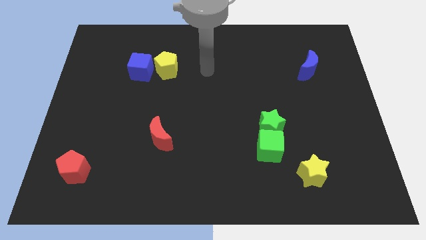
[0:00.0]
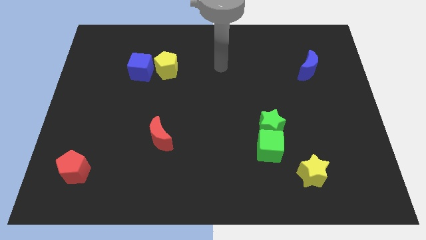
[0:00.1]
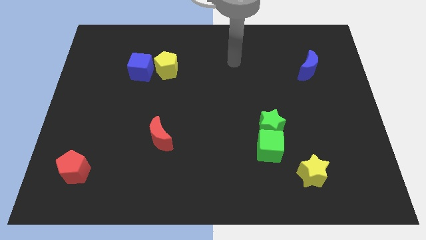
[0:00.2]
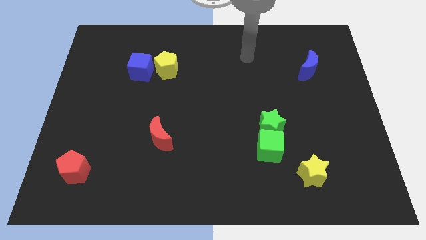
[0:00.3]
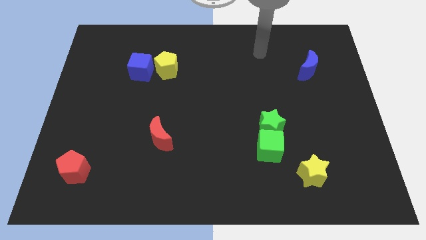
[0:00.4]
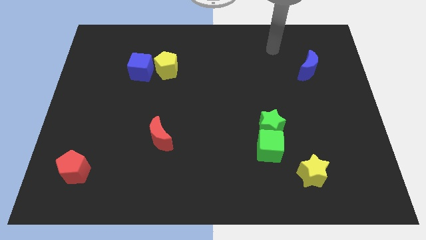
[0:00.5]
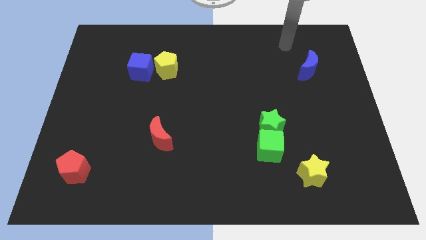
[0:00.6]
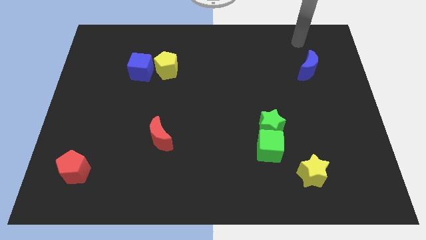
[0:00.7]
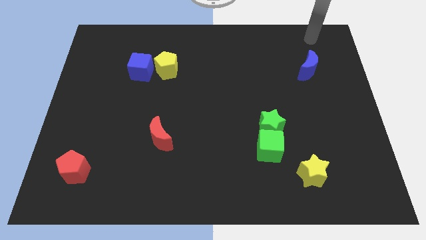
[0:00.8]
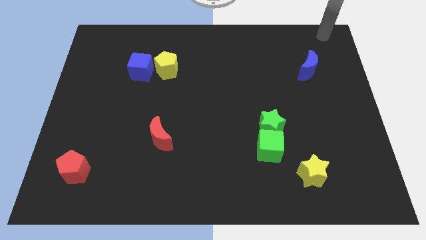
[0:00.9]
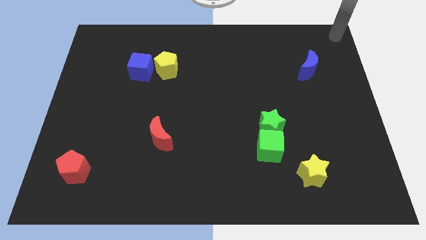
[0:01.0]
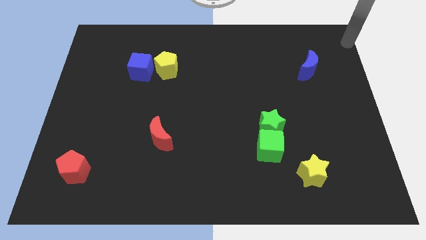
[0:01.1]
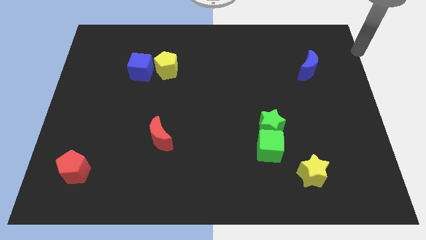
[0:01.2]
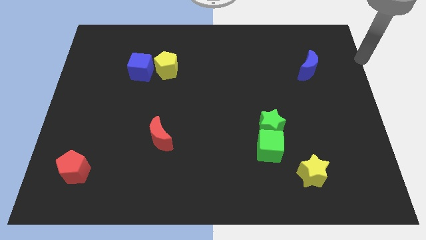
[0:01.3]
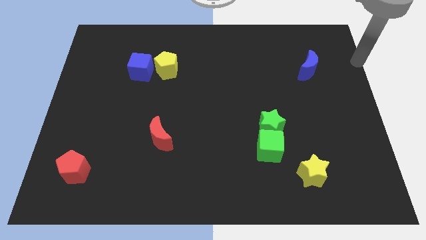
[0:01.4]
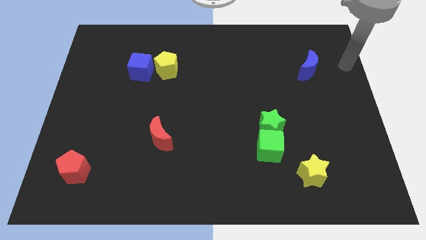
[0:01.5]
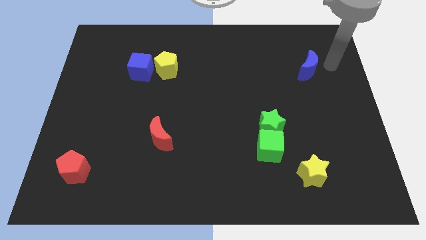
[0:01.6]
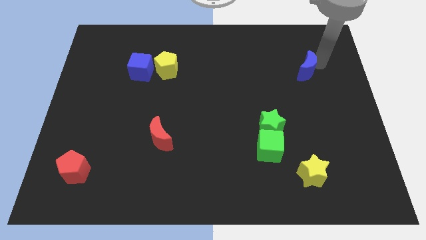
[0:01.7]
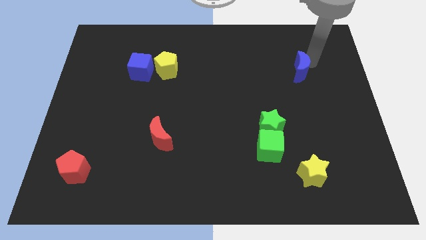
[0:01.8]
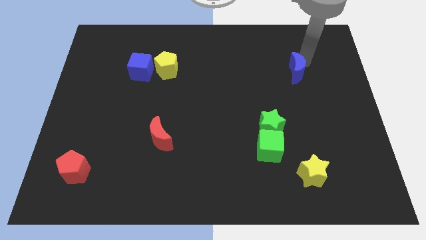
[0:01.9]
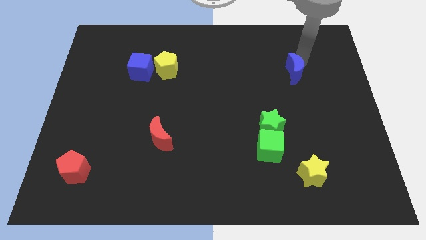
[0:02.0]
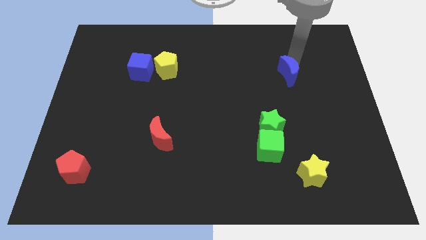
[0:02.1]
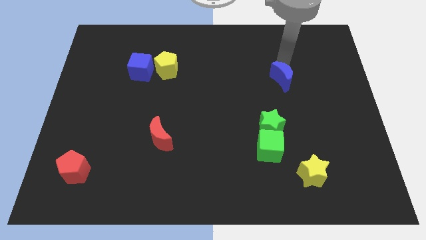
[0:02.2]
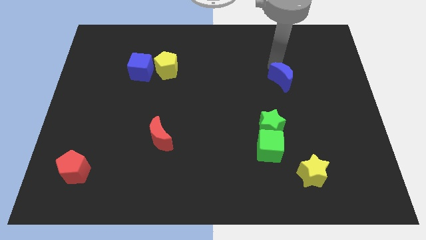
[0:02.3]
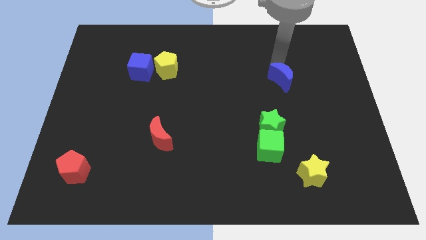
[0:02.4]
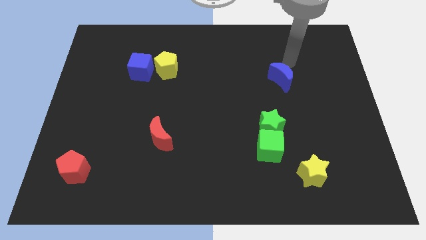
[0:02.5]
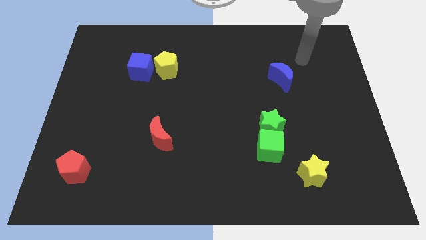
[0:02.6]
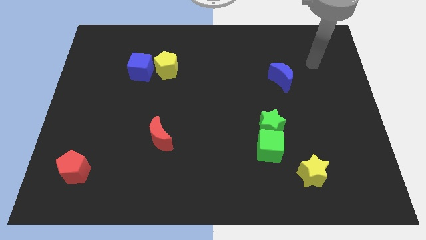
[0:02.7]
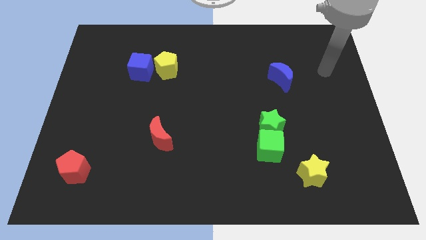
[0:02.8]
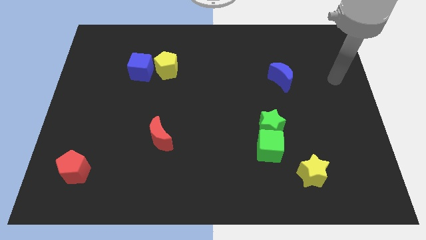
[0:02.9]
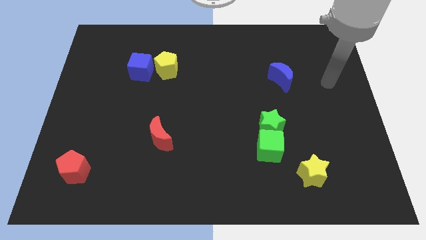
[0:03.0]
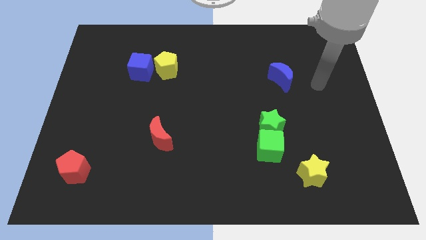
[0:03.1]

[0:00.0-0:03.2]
push the blue moon vertically to the top side of the green star

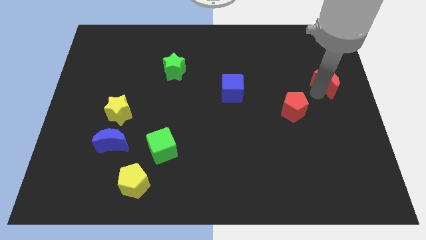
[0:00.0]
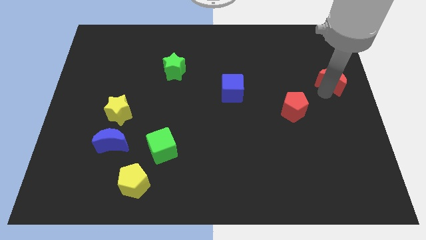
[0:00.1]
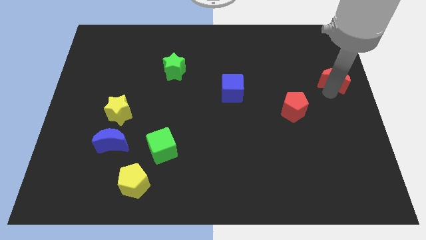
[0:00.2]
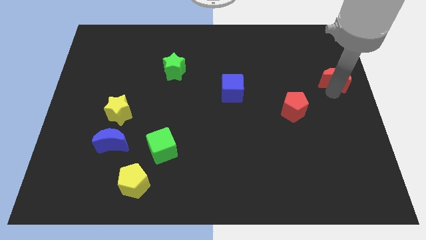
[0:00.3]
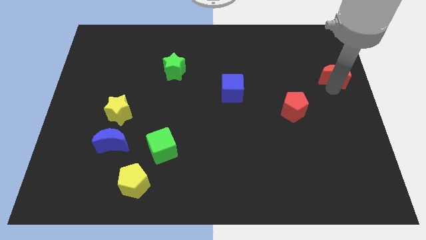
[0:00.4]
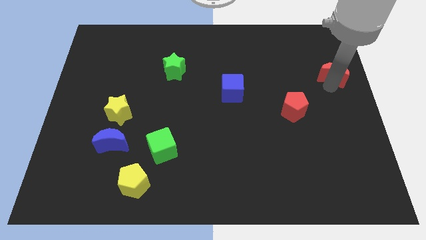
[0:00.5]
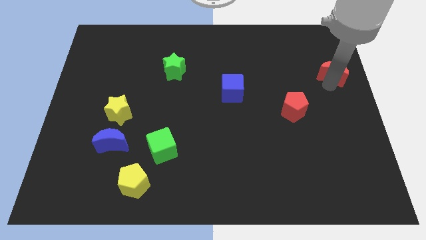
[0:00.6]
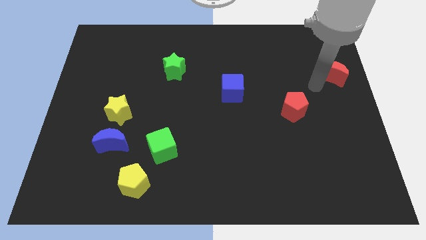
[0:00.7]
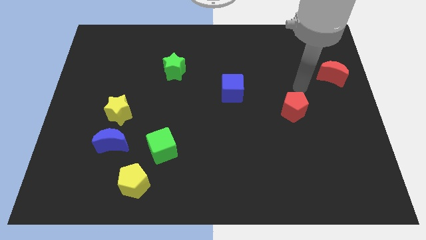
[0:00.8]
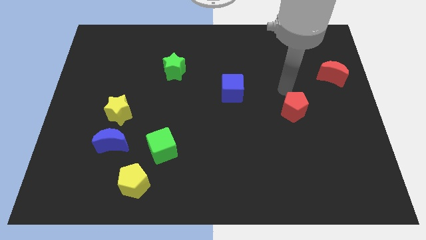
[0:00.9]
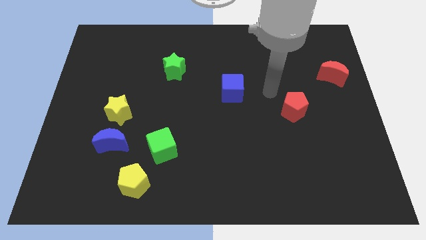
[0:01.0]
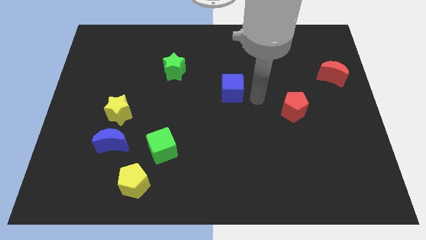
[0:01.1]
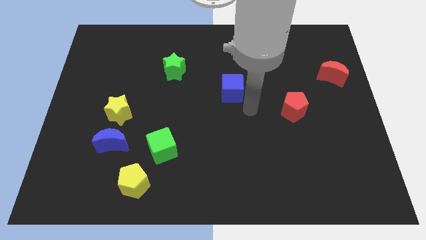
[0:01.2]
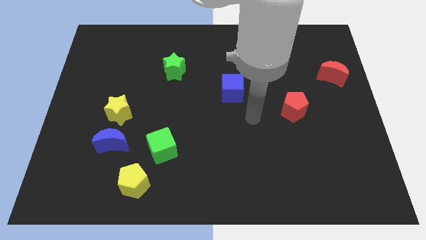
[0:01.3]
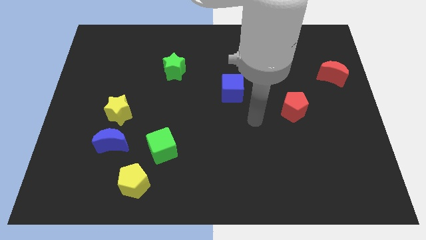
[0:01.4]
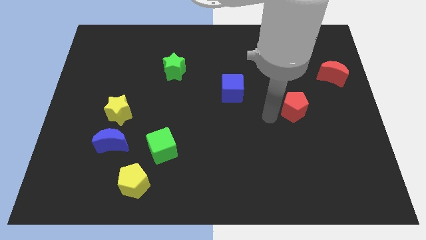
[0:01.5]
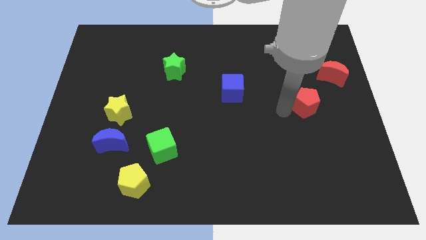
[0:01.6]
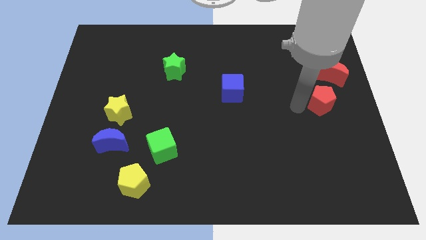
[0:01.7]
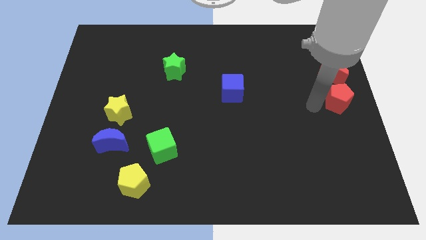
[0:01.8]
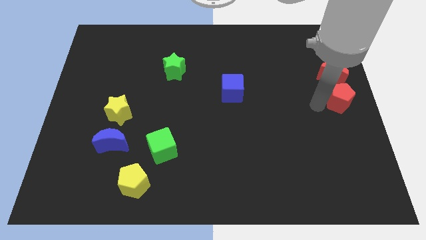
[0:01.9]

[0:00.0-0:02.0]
place the red moon towards the right center of the board

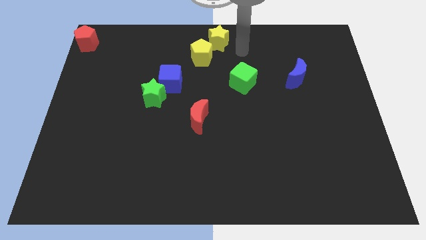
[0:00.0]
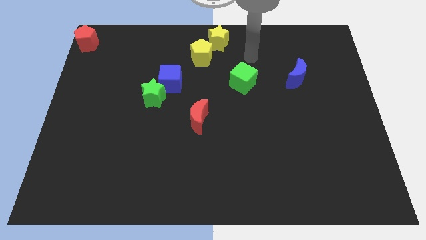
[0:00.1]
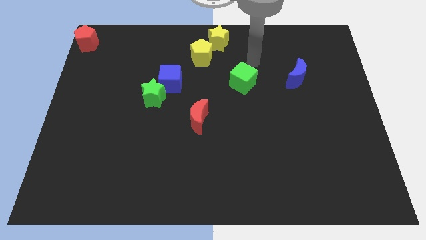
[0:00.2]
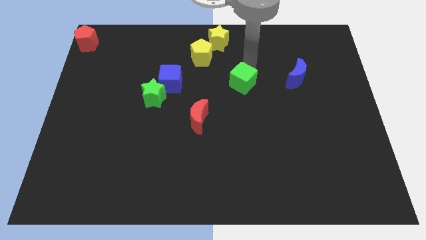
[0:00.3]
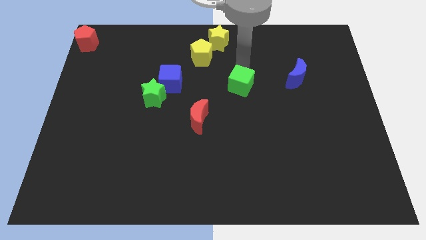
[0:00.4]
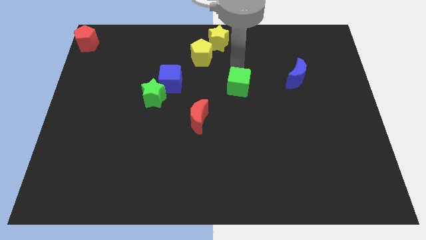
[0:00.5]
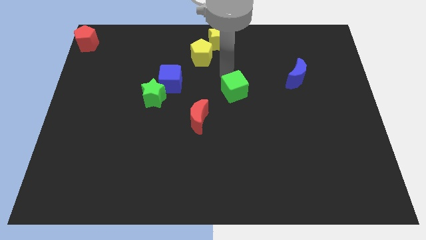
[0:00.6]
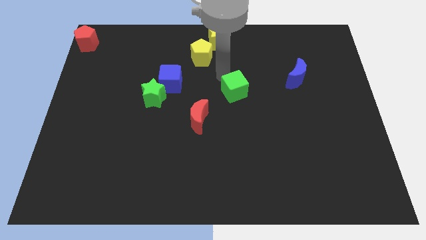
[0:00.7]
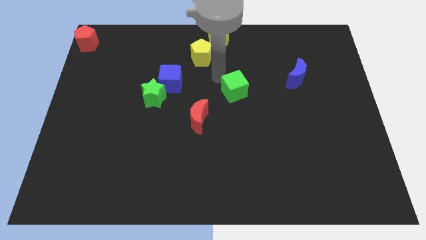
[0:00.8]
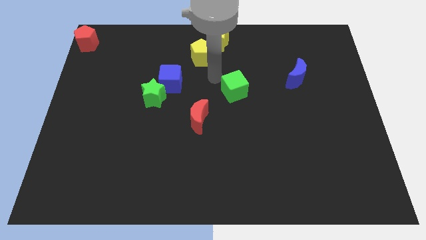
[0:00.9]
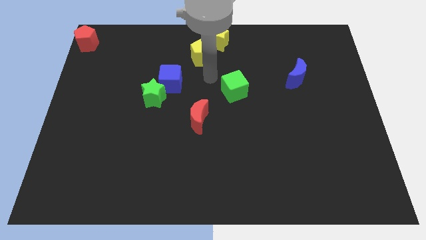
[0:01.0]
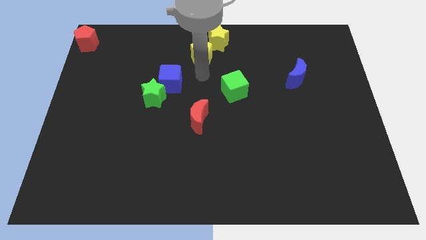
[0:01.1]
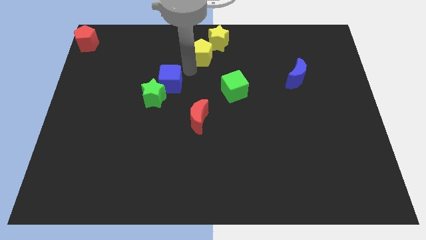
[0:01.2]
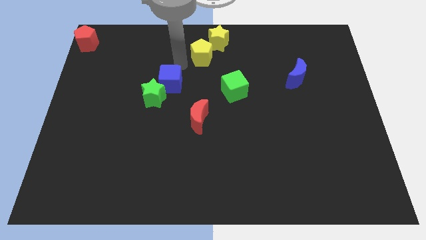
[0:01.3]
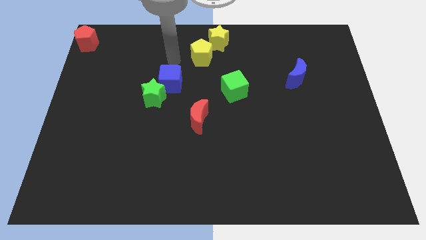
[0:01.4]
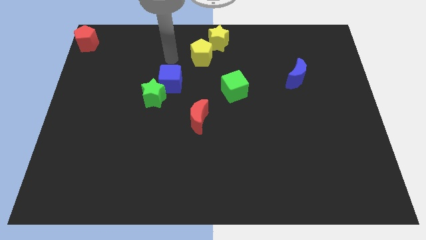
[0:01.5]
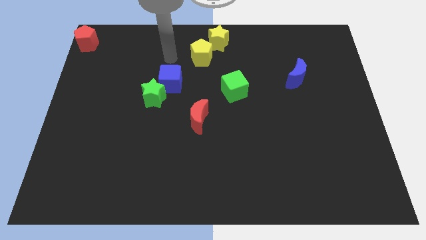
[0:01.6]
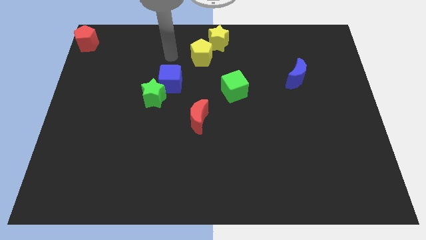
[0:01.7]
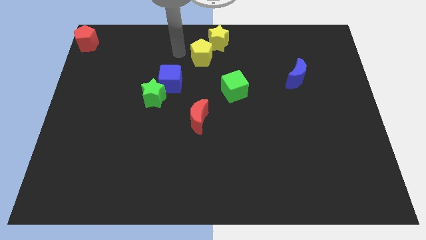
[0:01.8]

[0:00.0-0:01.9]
slightly move green cube towards the red crescent

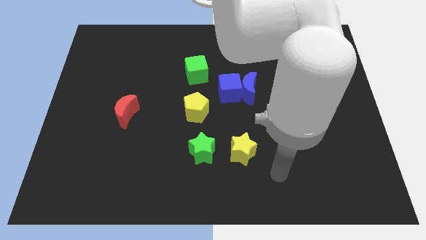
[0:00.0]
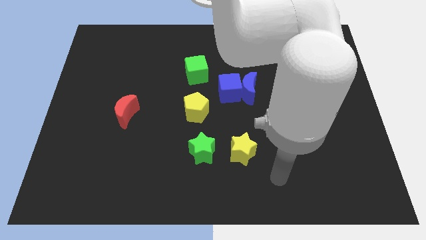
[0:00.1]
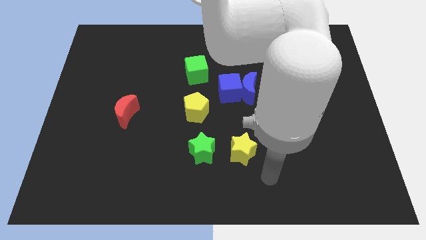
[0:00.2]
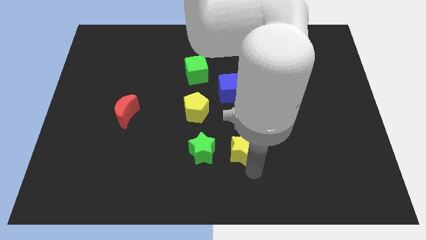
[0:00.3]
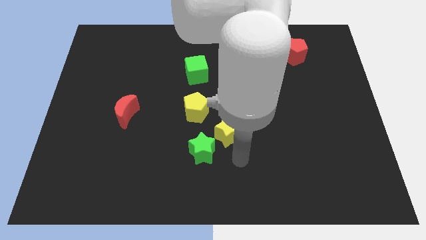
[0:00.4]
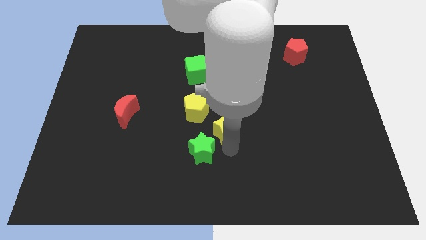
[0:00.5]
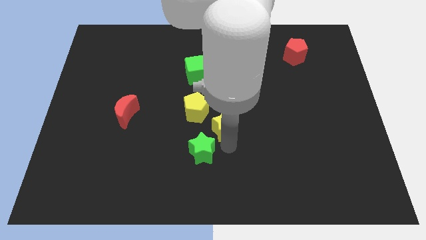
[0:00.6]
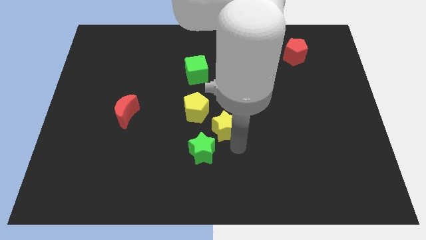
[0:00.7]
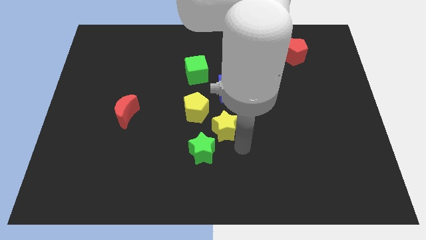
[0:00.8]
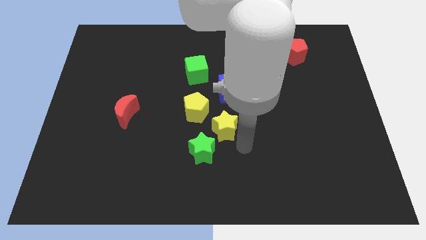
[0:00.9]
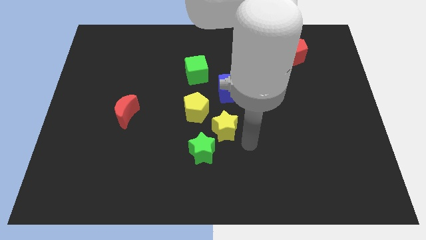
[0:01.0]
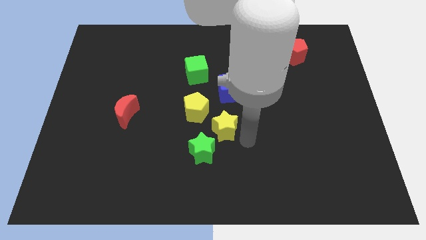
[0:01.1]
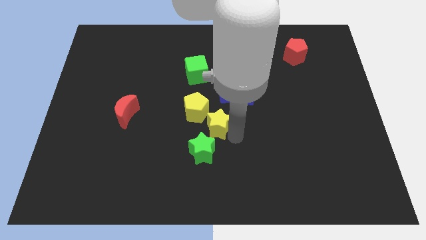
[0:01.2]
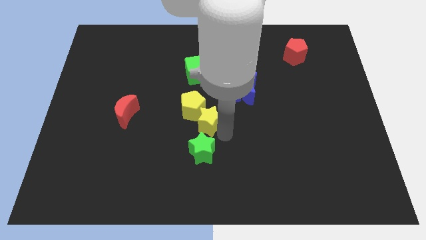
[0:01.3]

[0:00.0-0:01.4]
move the yellow star into the yellow pentagon

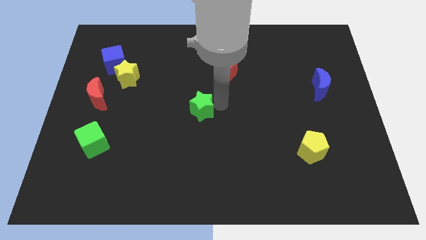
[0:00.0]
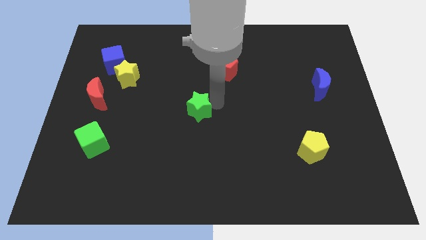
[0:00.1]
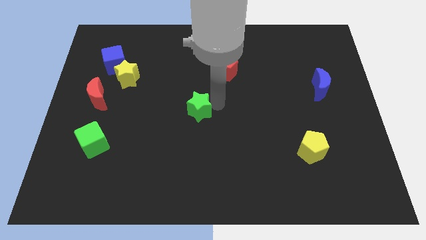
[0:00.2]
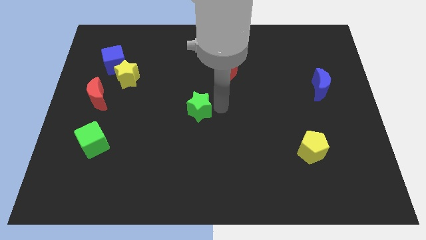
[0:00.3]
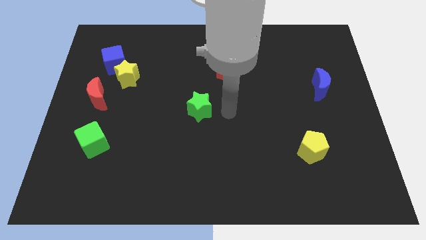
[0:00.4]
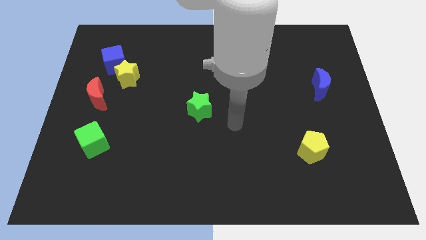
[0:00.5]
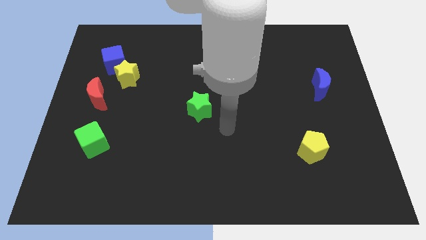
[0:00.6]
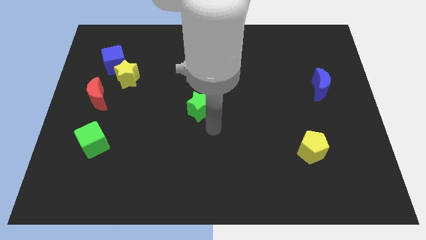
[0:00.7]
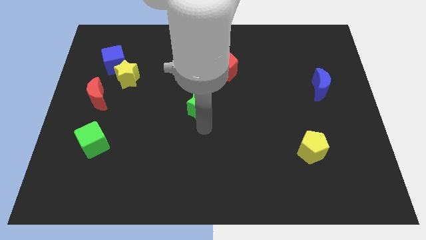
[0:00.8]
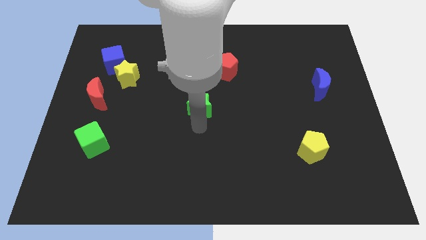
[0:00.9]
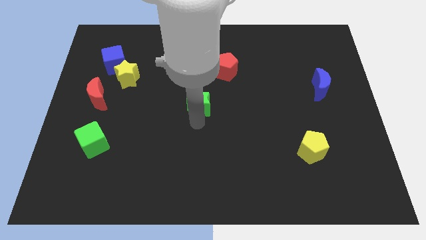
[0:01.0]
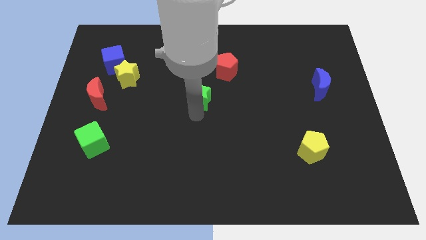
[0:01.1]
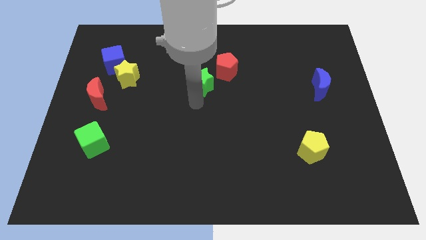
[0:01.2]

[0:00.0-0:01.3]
move the green star bottom left to the red pentagon
